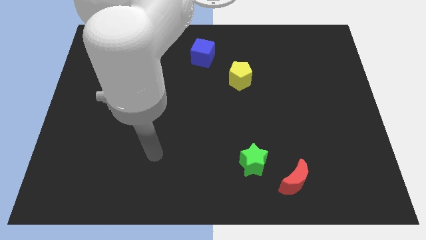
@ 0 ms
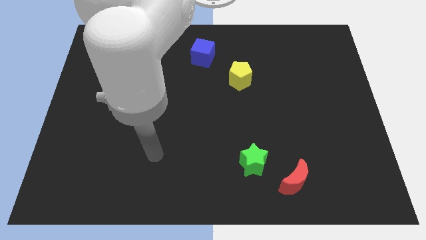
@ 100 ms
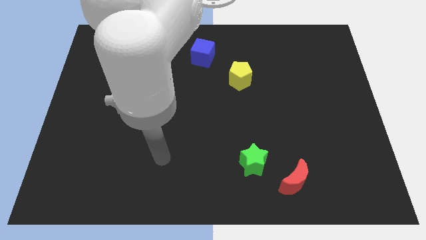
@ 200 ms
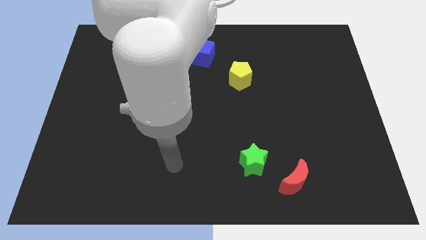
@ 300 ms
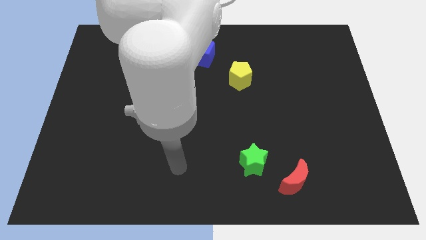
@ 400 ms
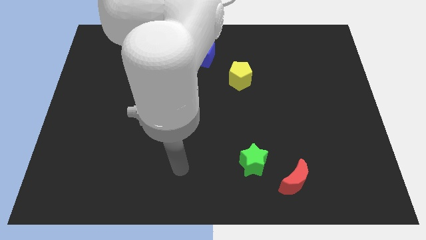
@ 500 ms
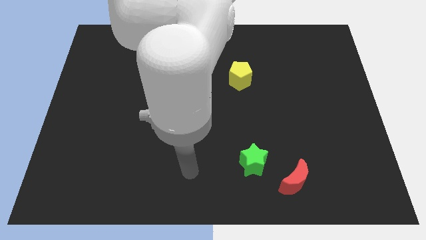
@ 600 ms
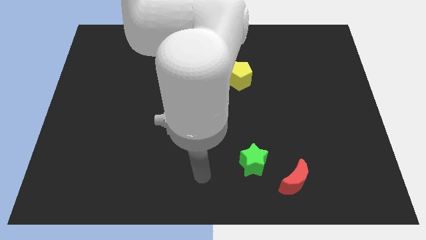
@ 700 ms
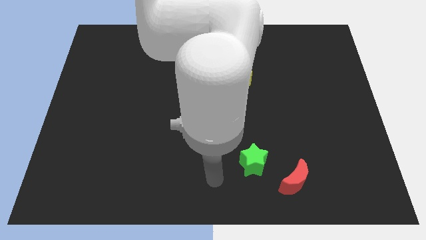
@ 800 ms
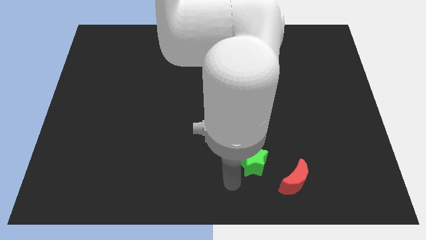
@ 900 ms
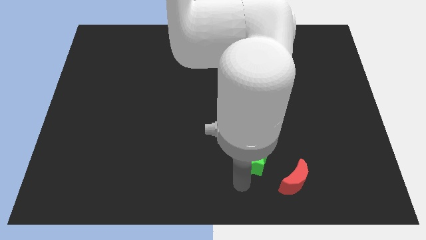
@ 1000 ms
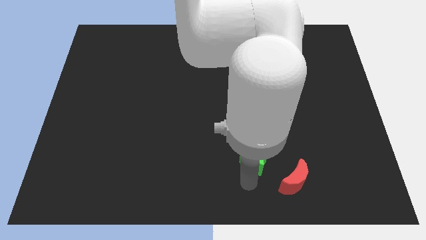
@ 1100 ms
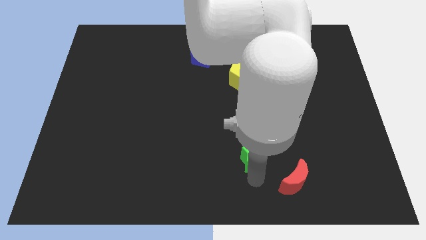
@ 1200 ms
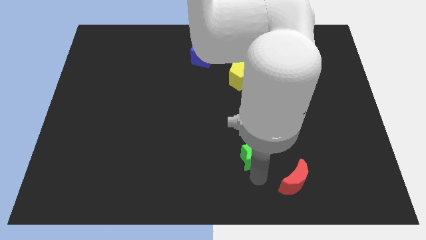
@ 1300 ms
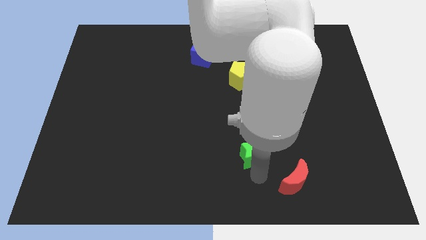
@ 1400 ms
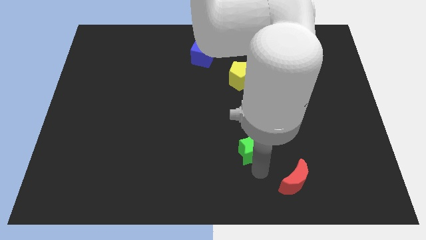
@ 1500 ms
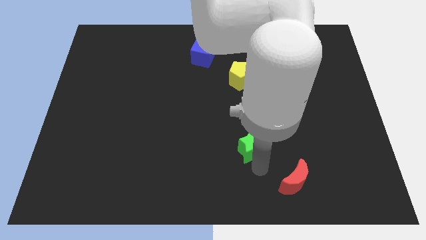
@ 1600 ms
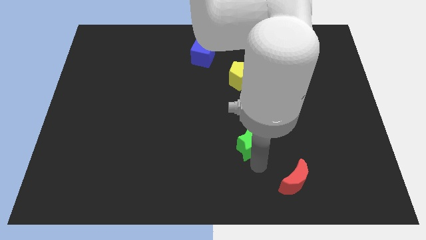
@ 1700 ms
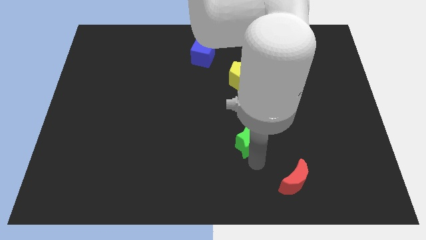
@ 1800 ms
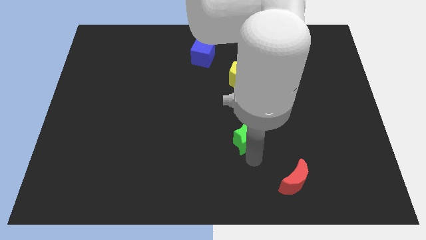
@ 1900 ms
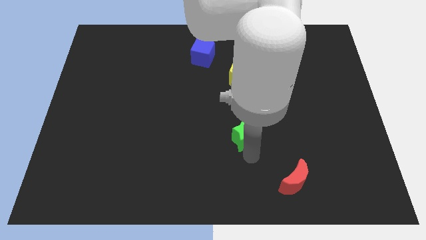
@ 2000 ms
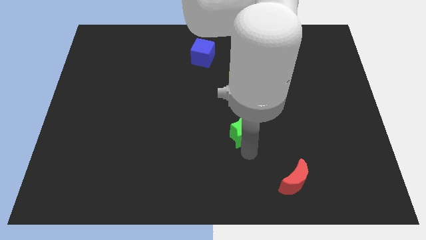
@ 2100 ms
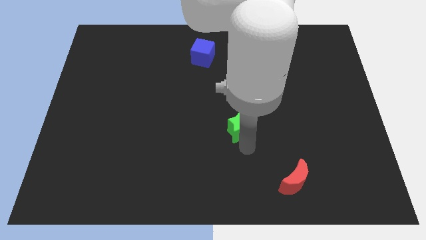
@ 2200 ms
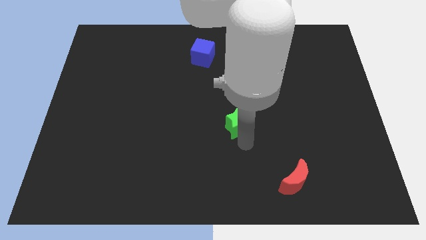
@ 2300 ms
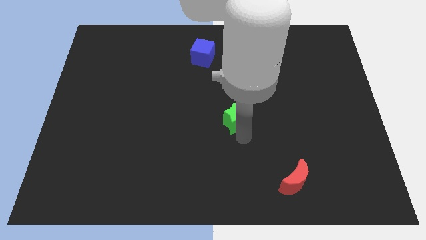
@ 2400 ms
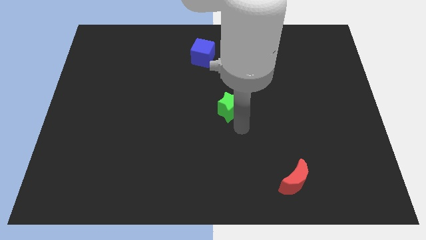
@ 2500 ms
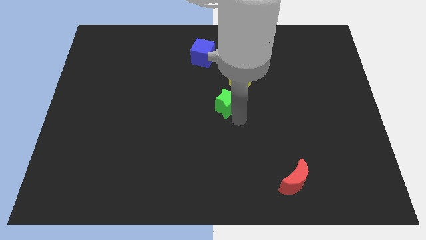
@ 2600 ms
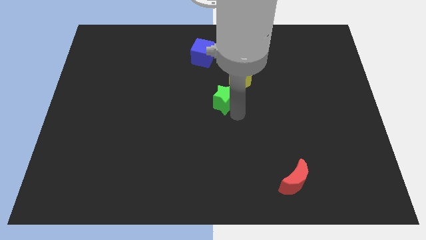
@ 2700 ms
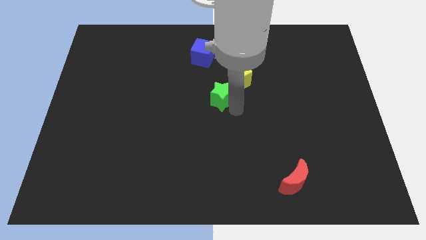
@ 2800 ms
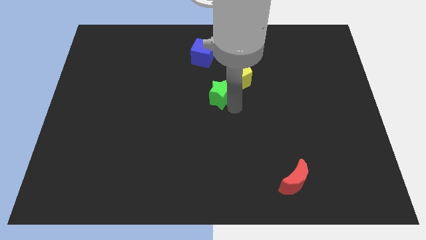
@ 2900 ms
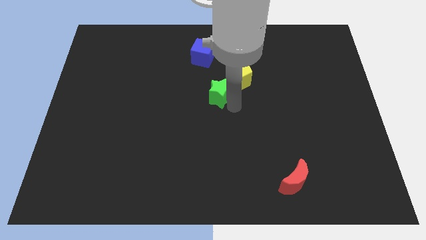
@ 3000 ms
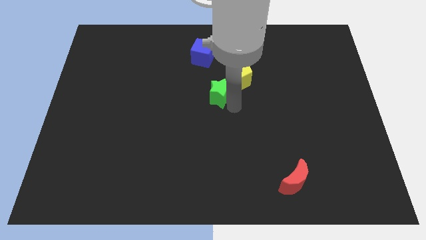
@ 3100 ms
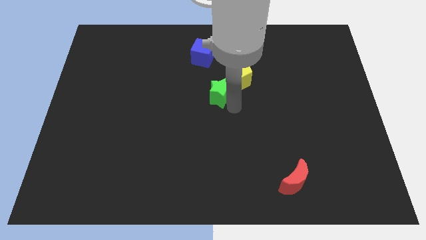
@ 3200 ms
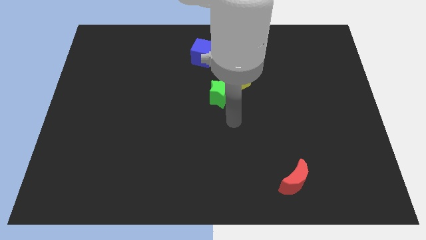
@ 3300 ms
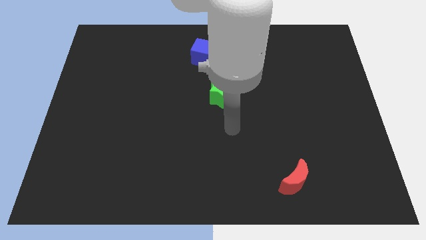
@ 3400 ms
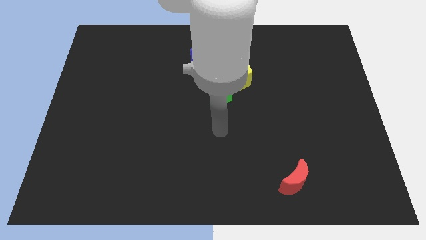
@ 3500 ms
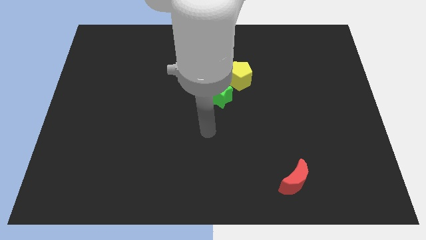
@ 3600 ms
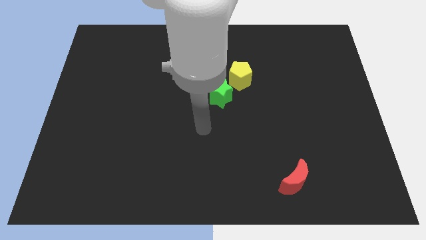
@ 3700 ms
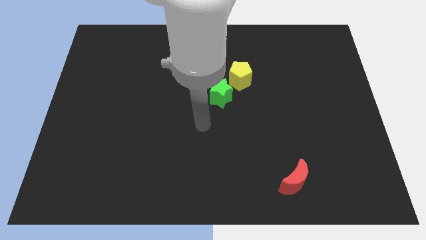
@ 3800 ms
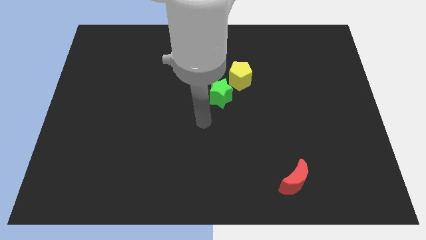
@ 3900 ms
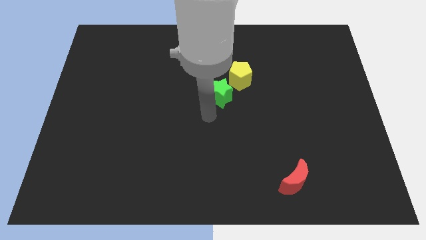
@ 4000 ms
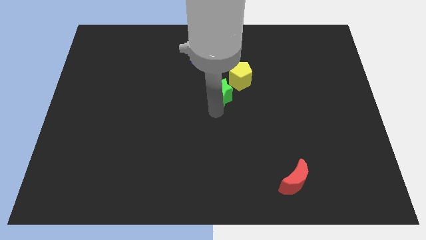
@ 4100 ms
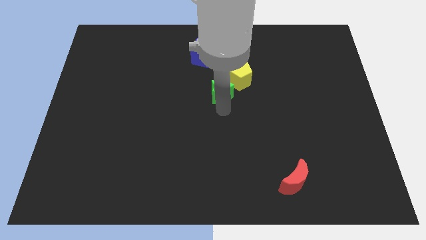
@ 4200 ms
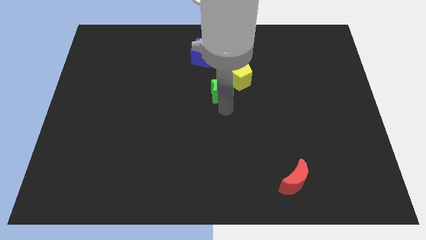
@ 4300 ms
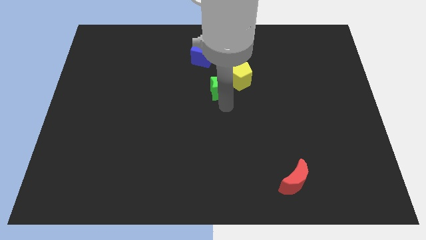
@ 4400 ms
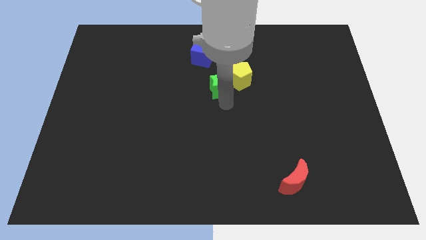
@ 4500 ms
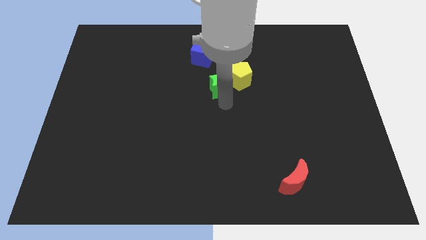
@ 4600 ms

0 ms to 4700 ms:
put the star to the yellow pentagon

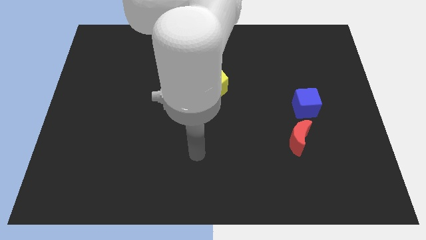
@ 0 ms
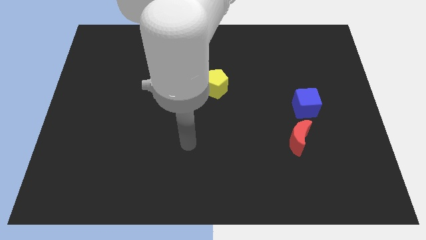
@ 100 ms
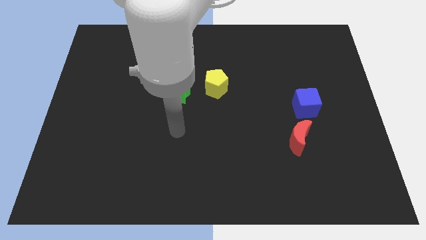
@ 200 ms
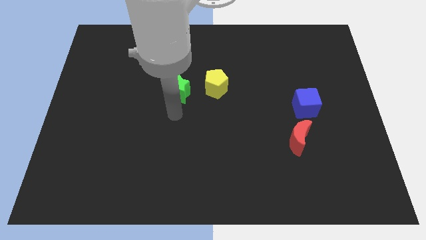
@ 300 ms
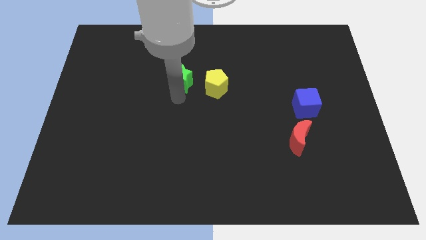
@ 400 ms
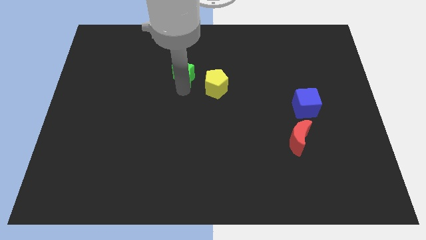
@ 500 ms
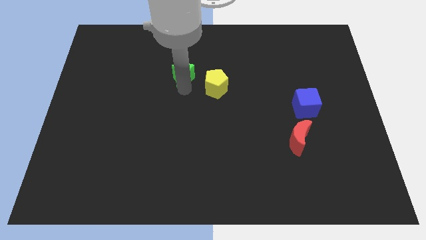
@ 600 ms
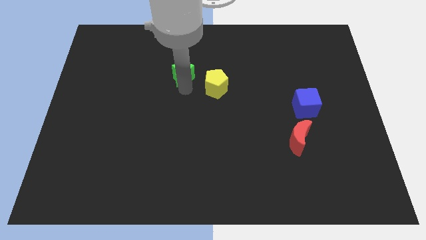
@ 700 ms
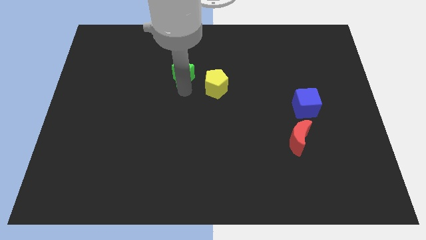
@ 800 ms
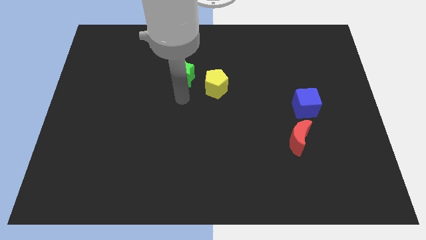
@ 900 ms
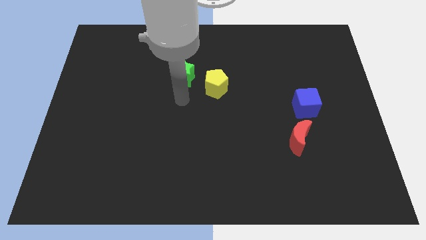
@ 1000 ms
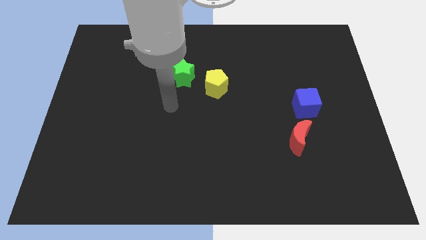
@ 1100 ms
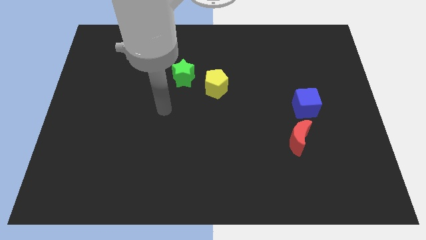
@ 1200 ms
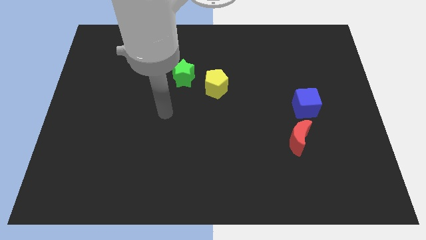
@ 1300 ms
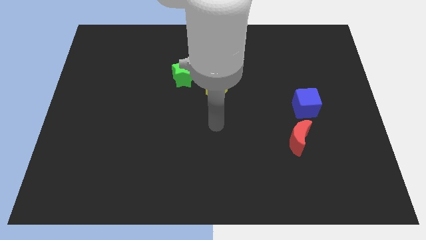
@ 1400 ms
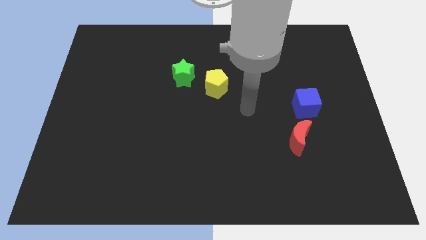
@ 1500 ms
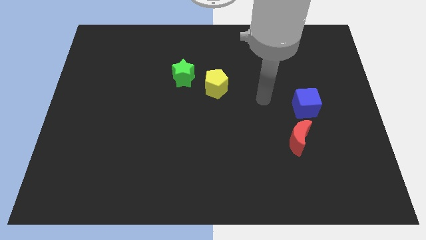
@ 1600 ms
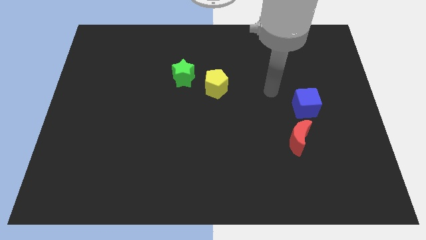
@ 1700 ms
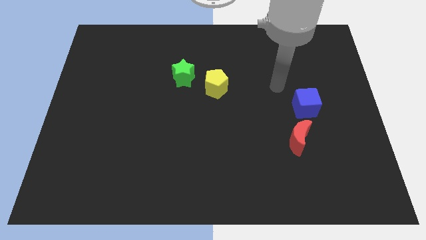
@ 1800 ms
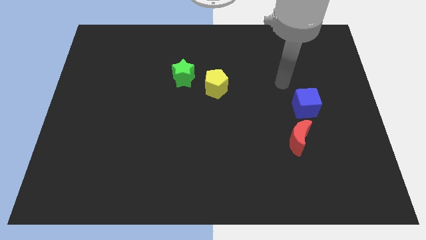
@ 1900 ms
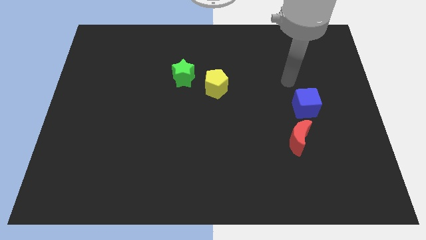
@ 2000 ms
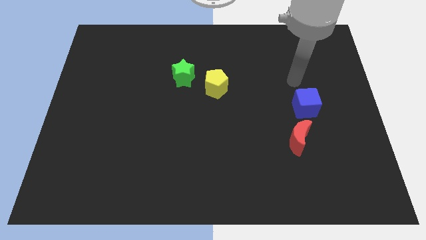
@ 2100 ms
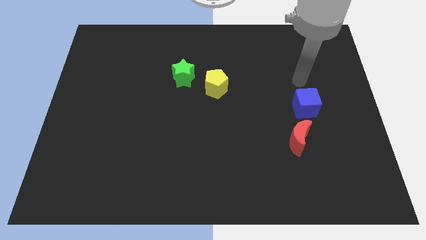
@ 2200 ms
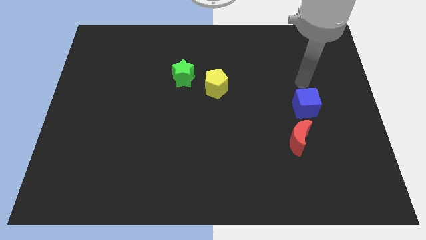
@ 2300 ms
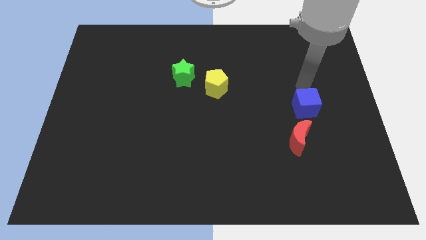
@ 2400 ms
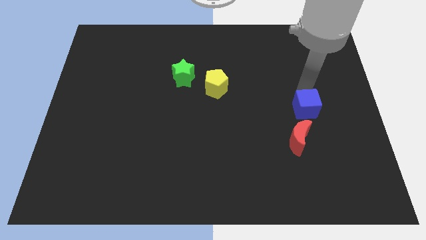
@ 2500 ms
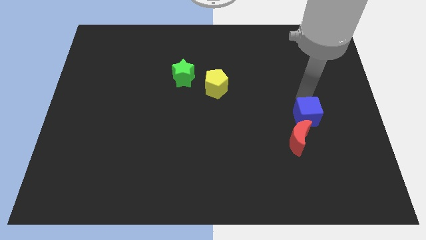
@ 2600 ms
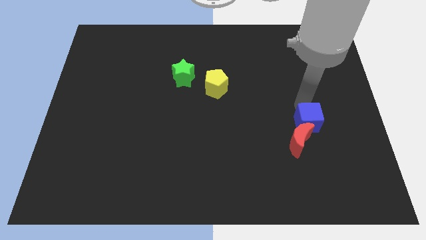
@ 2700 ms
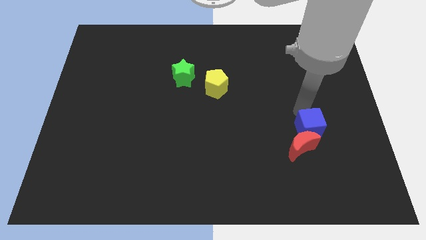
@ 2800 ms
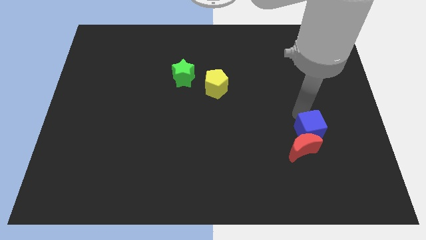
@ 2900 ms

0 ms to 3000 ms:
slide the blue cube to the red moon

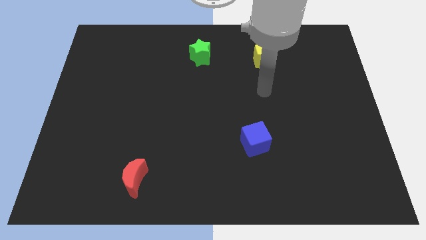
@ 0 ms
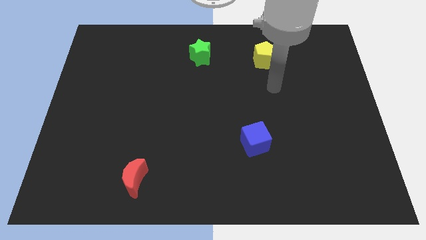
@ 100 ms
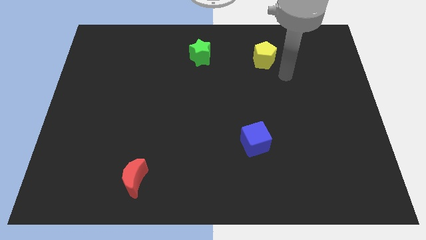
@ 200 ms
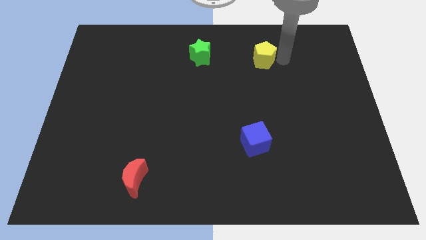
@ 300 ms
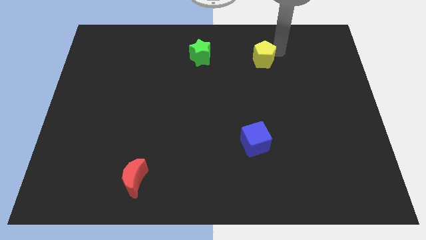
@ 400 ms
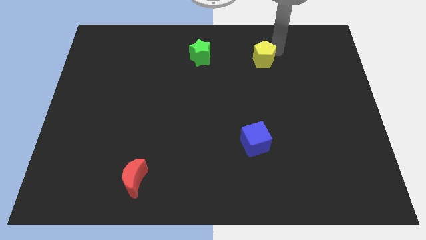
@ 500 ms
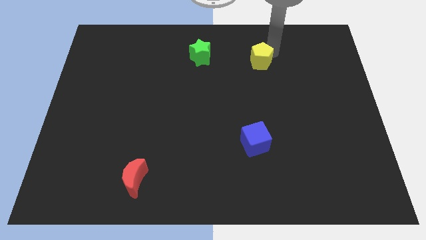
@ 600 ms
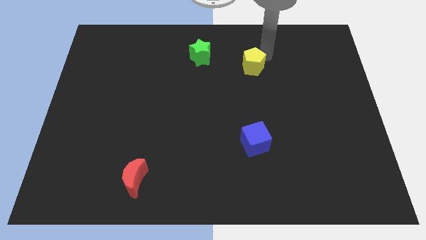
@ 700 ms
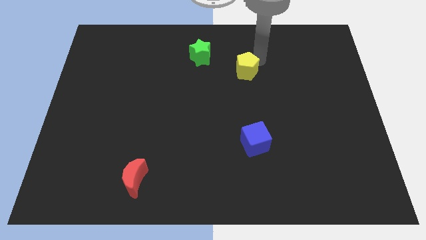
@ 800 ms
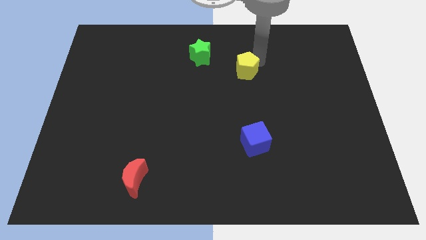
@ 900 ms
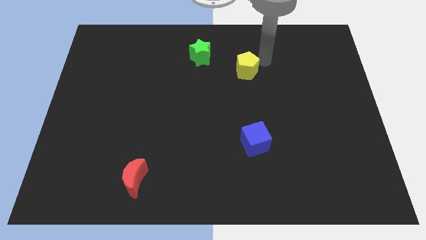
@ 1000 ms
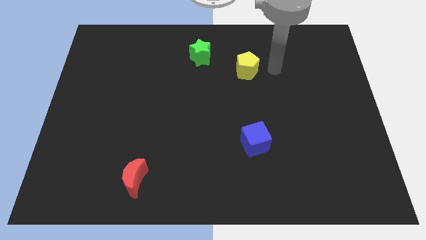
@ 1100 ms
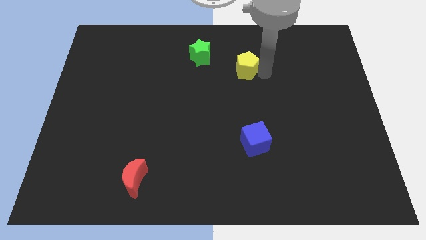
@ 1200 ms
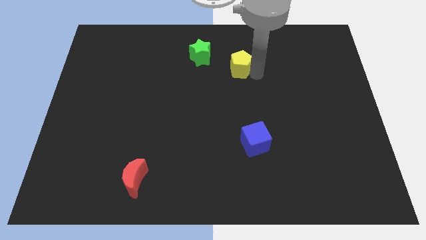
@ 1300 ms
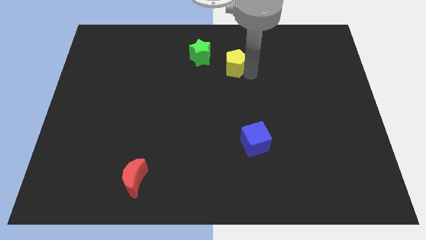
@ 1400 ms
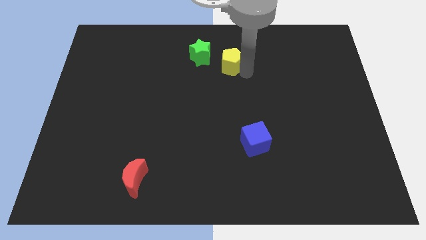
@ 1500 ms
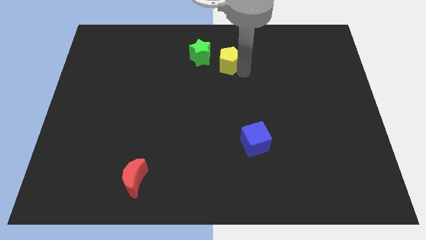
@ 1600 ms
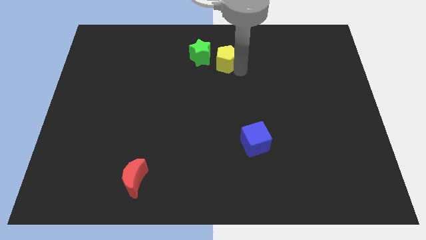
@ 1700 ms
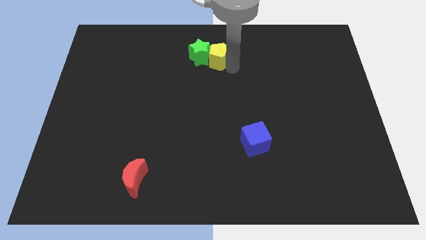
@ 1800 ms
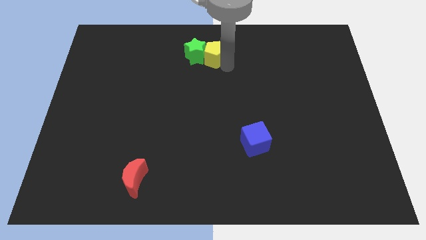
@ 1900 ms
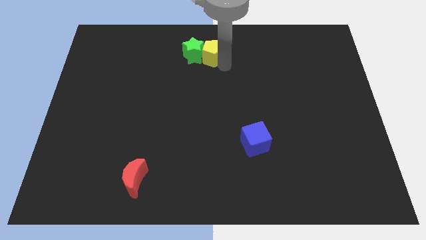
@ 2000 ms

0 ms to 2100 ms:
slide the yellow pentagon towards the star
